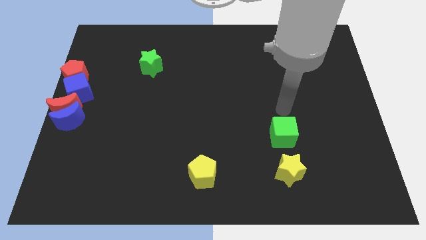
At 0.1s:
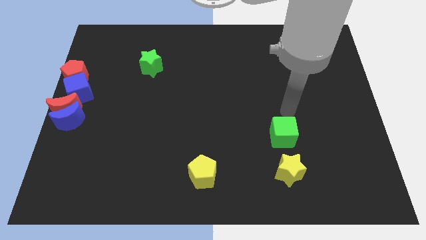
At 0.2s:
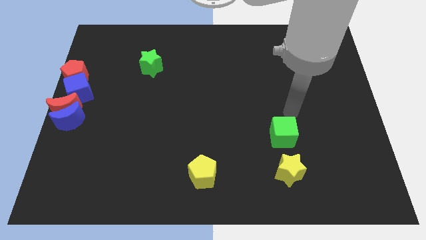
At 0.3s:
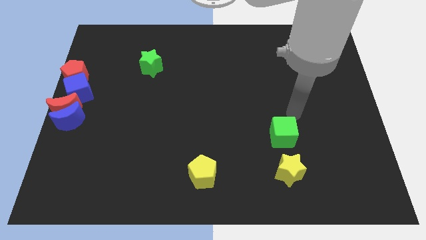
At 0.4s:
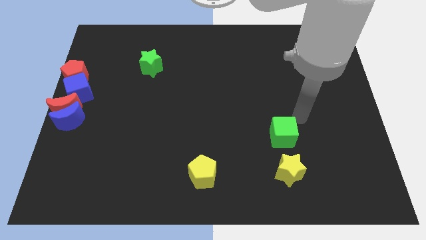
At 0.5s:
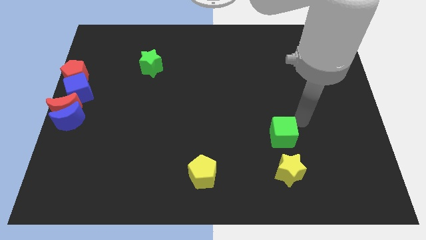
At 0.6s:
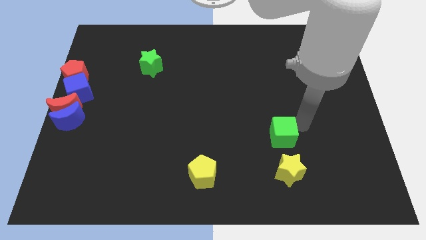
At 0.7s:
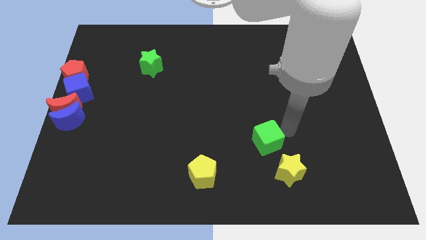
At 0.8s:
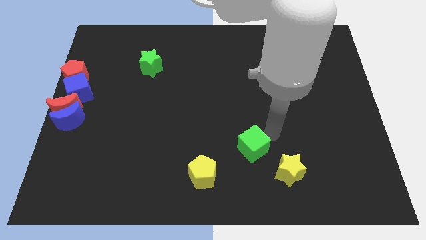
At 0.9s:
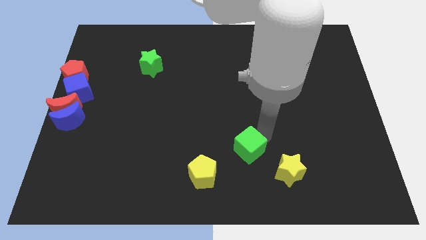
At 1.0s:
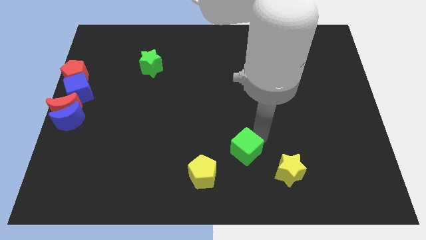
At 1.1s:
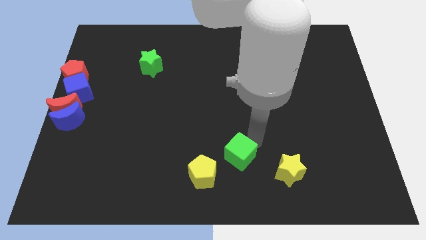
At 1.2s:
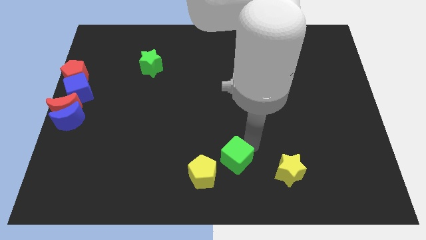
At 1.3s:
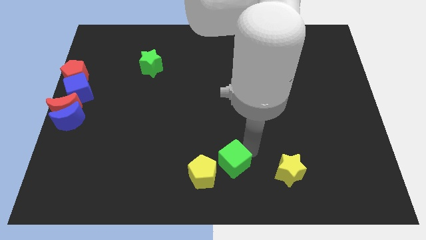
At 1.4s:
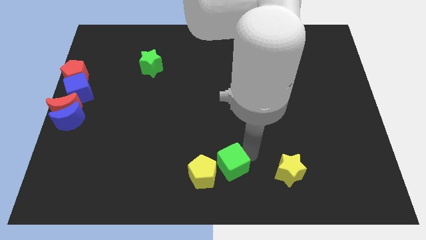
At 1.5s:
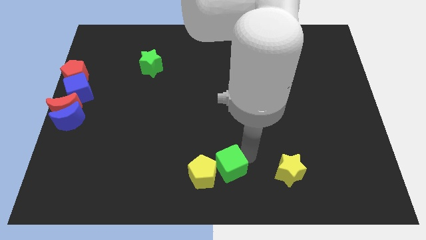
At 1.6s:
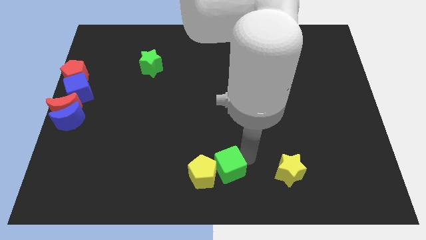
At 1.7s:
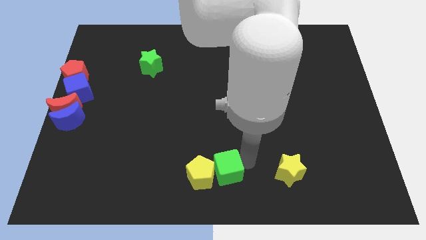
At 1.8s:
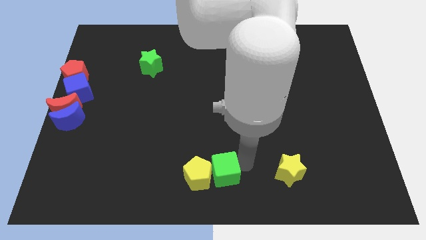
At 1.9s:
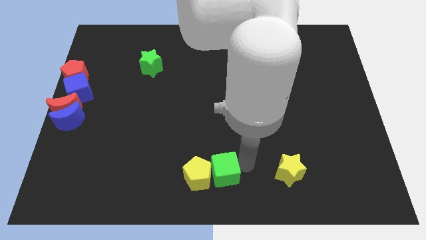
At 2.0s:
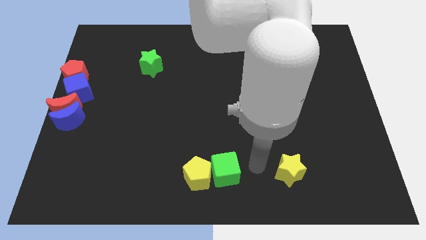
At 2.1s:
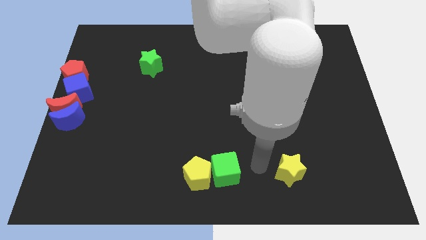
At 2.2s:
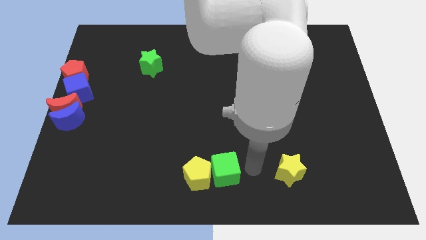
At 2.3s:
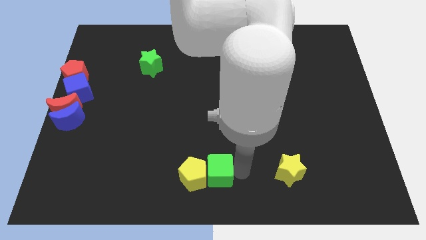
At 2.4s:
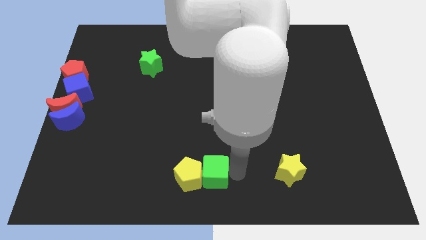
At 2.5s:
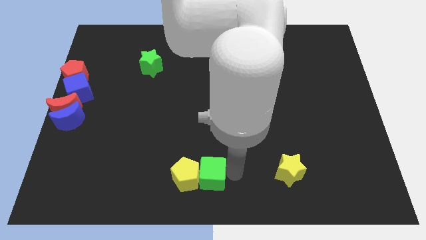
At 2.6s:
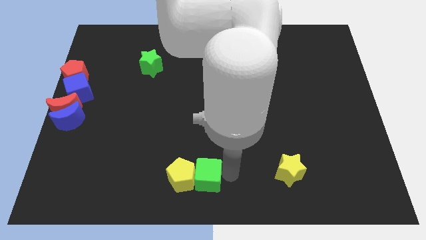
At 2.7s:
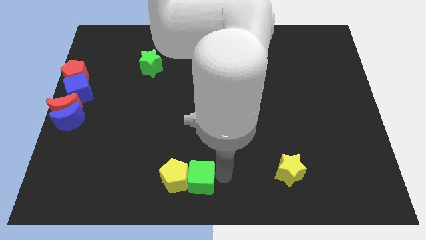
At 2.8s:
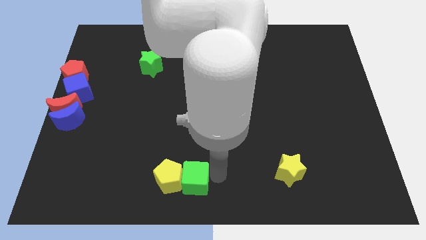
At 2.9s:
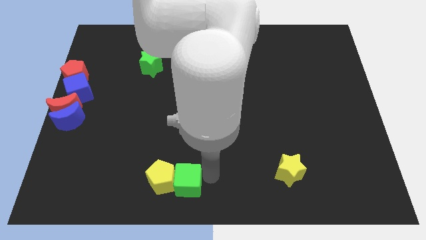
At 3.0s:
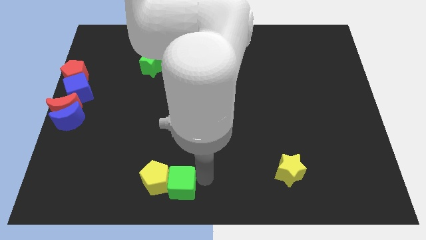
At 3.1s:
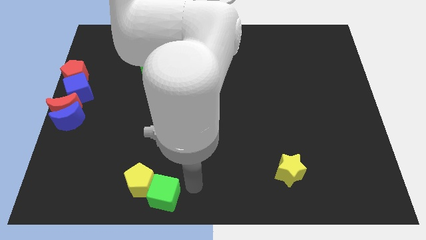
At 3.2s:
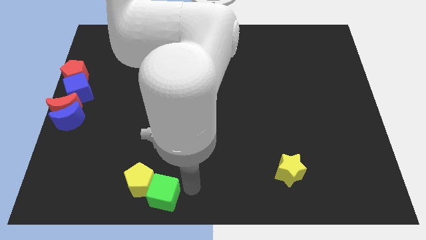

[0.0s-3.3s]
move the green cube and yellow pentagon towards the bottom left side of the board

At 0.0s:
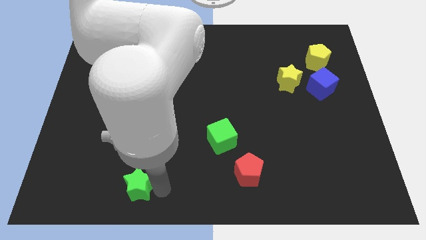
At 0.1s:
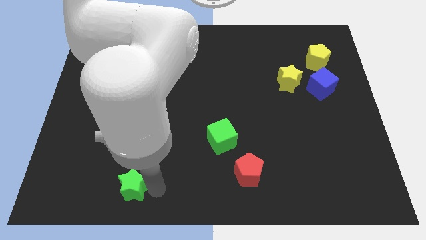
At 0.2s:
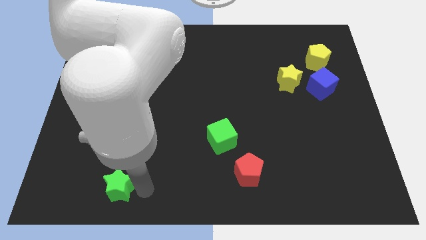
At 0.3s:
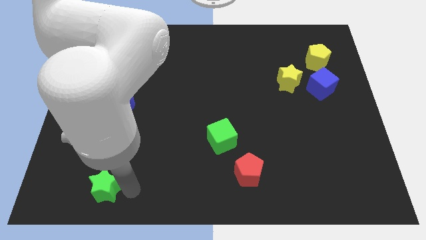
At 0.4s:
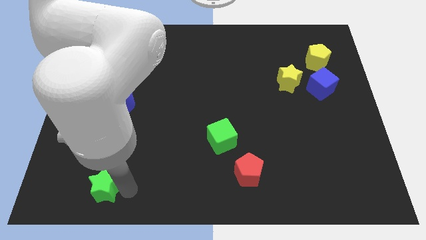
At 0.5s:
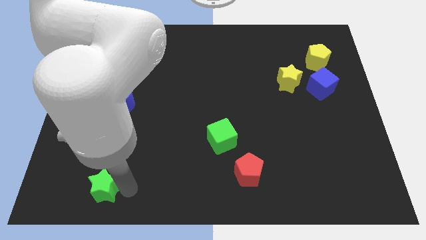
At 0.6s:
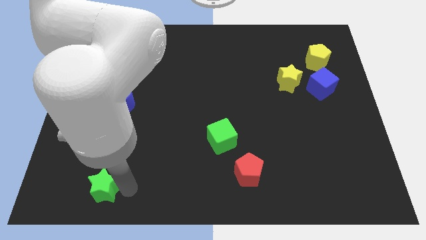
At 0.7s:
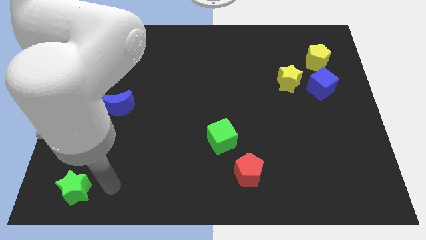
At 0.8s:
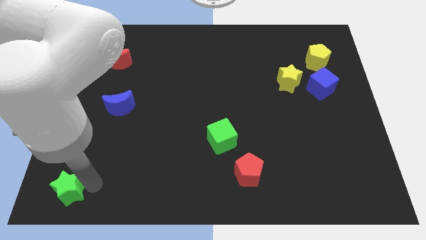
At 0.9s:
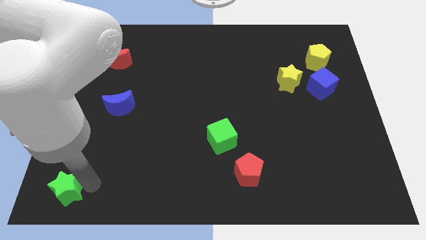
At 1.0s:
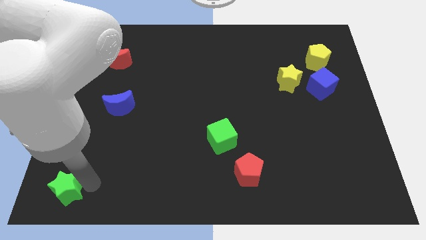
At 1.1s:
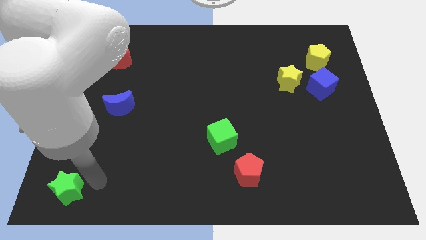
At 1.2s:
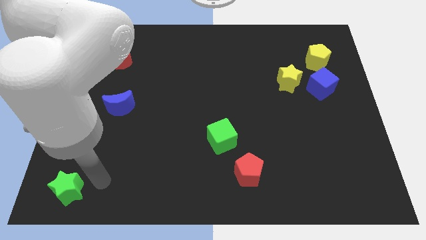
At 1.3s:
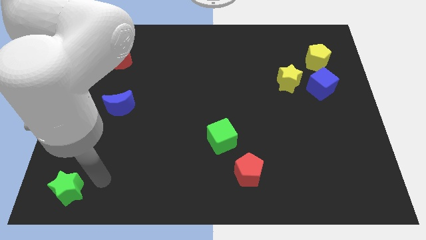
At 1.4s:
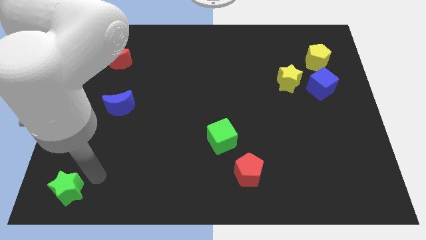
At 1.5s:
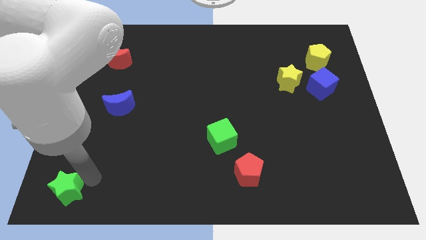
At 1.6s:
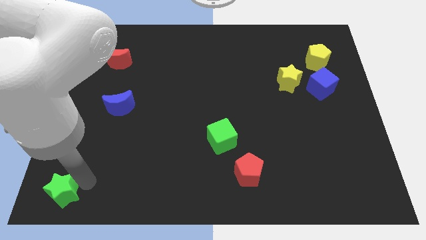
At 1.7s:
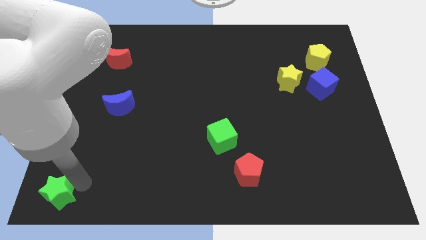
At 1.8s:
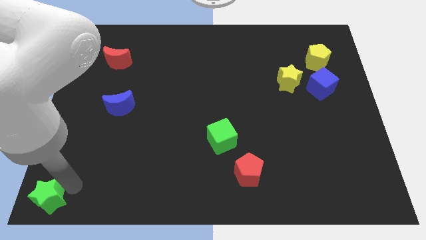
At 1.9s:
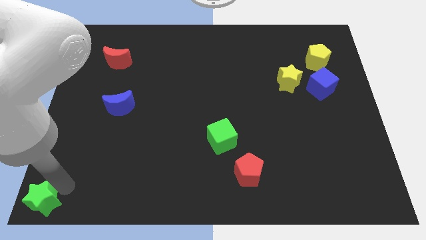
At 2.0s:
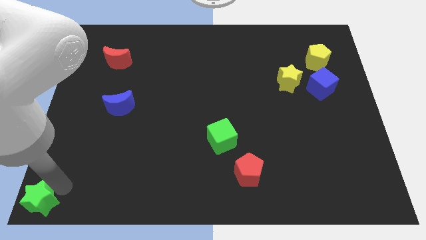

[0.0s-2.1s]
slightly move the green star to the bottom left corner

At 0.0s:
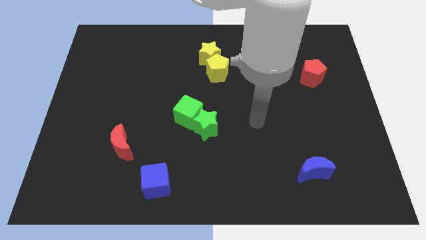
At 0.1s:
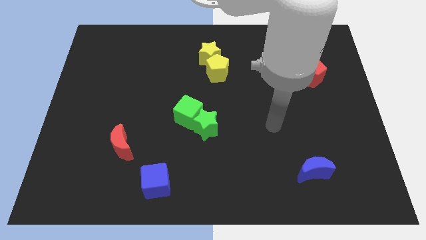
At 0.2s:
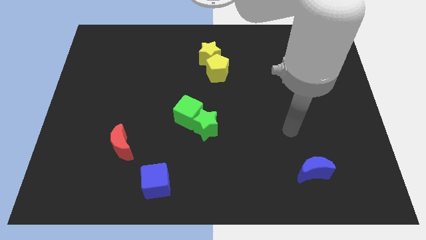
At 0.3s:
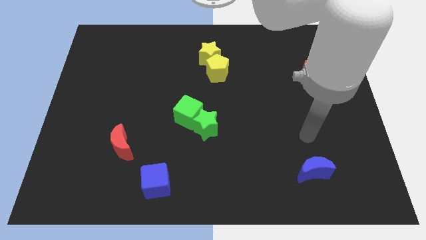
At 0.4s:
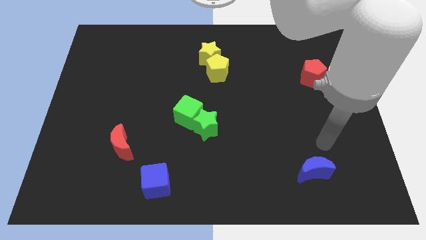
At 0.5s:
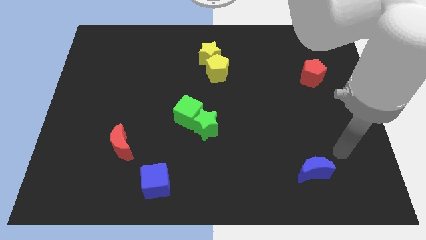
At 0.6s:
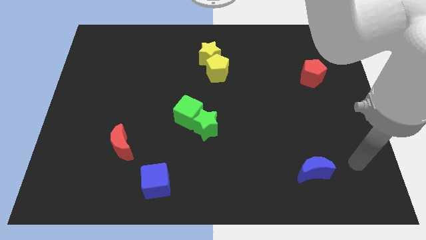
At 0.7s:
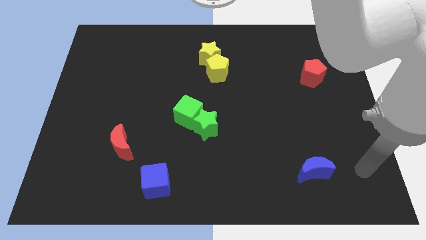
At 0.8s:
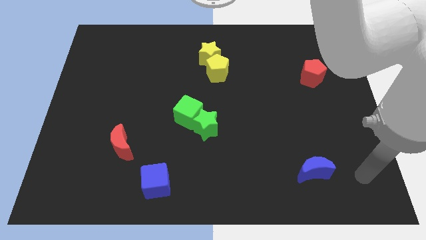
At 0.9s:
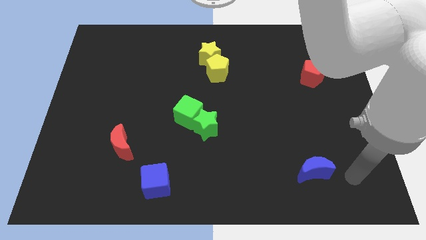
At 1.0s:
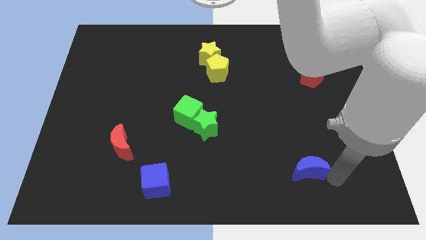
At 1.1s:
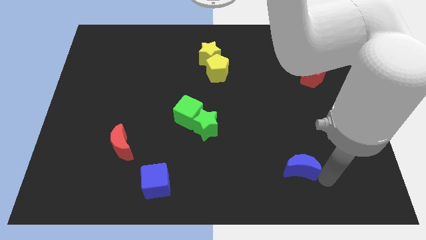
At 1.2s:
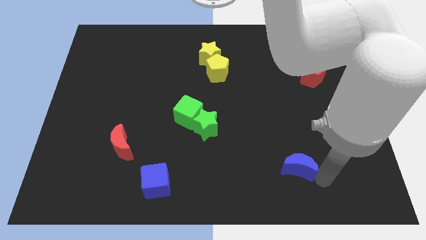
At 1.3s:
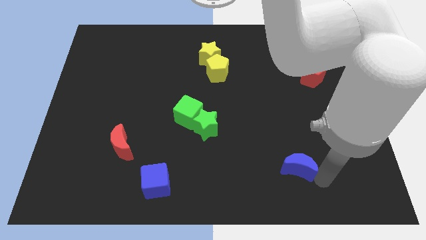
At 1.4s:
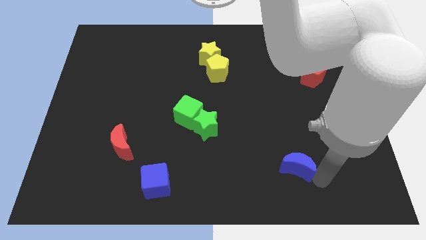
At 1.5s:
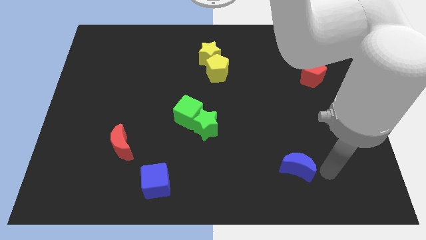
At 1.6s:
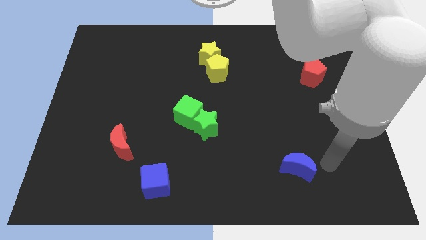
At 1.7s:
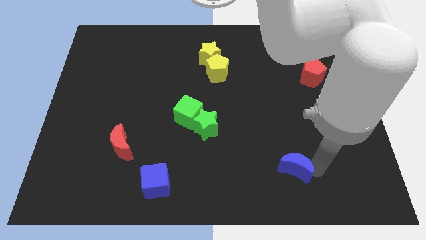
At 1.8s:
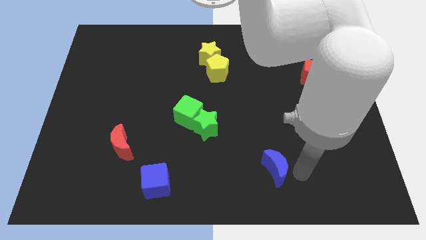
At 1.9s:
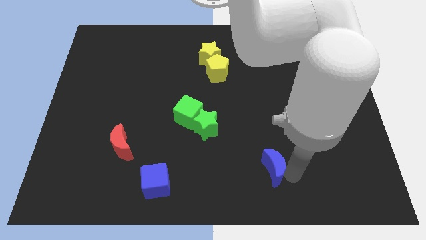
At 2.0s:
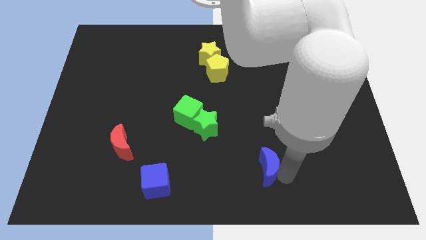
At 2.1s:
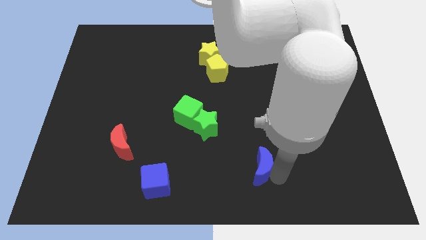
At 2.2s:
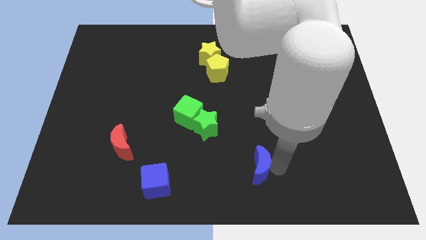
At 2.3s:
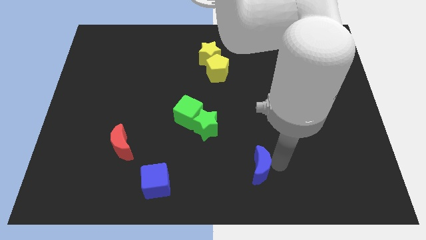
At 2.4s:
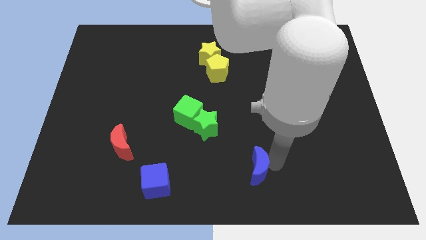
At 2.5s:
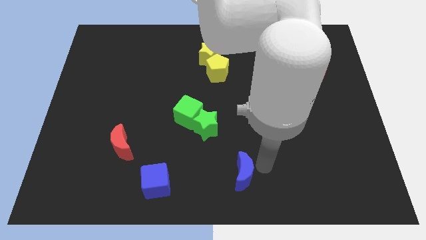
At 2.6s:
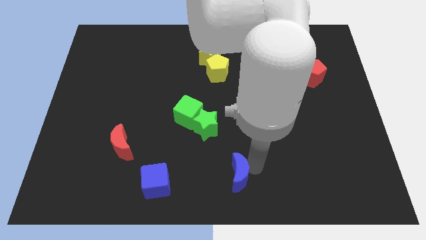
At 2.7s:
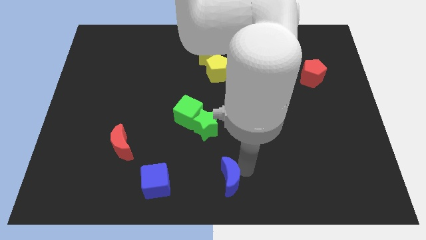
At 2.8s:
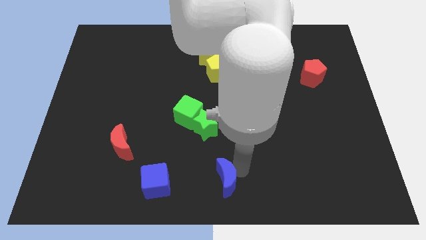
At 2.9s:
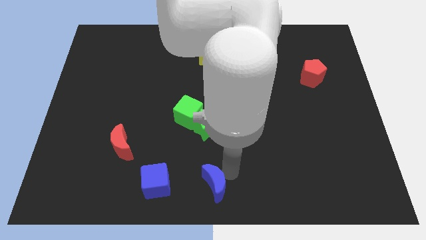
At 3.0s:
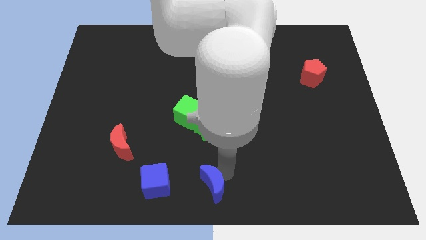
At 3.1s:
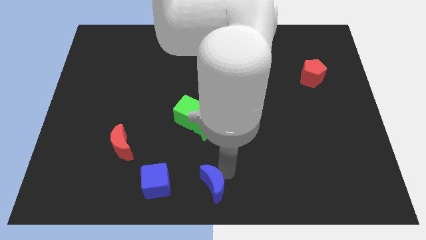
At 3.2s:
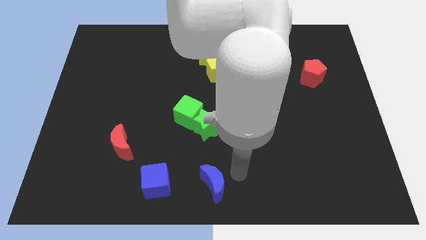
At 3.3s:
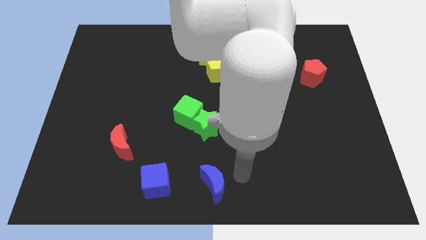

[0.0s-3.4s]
push the blue crescent to the right of the blue cube

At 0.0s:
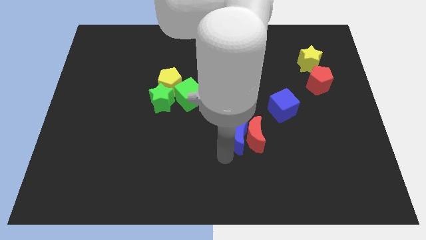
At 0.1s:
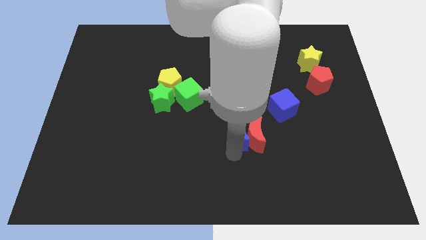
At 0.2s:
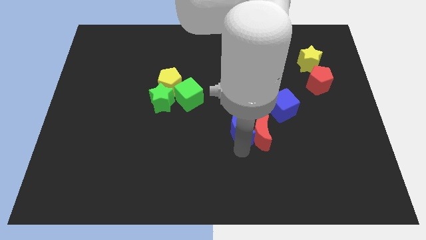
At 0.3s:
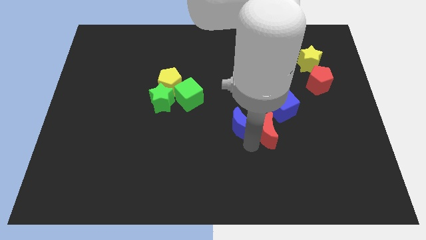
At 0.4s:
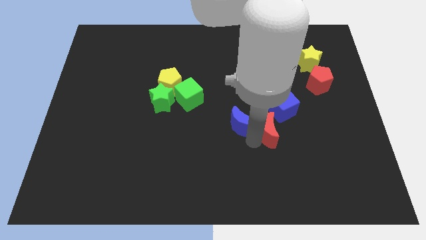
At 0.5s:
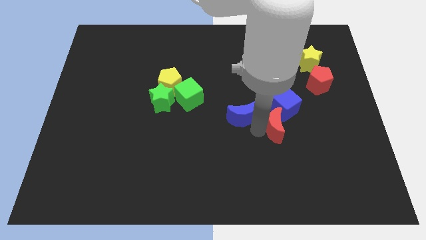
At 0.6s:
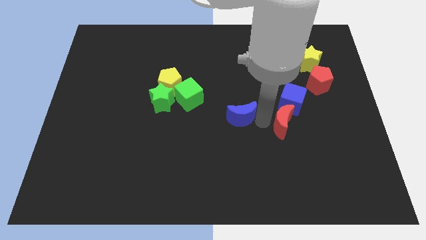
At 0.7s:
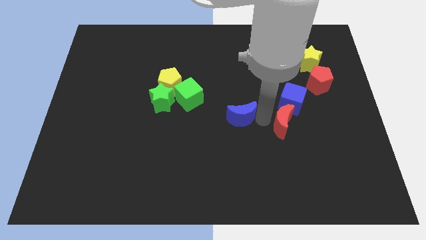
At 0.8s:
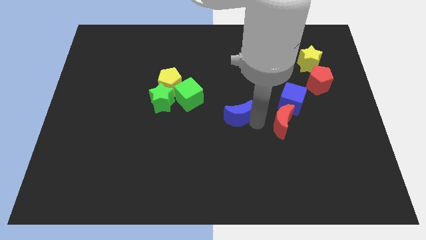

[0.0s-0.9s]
separate blue moon and red moon
